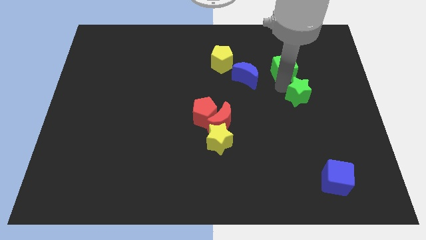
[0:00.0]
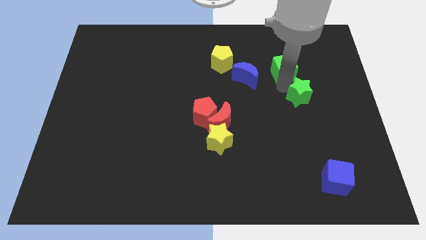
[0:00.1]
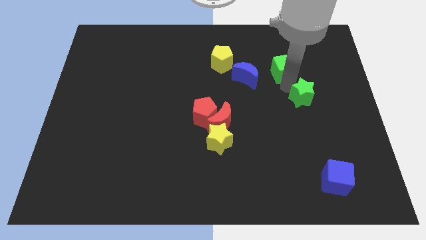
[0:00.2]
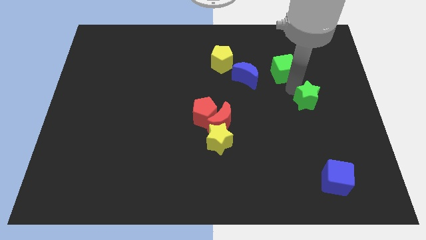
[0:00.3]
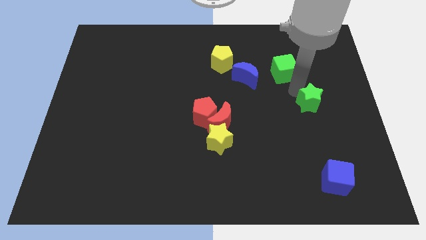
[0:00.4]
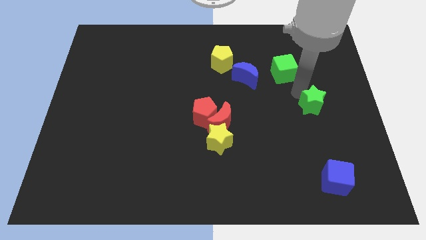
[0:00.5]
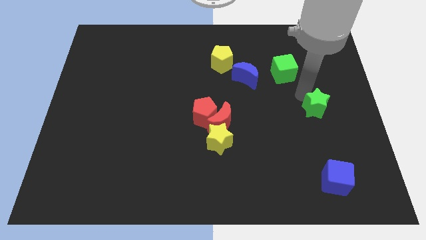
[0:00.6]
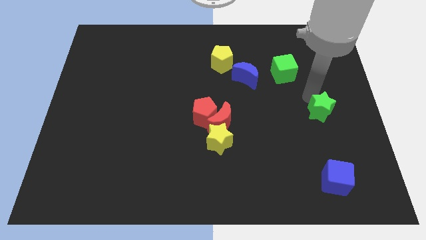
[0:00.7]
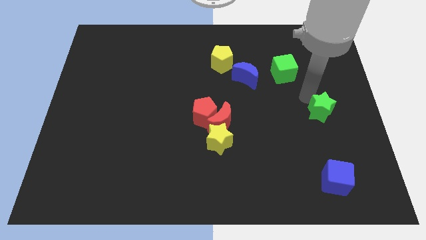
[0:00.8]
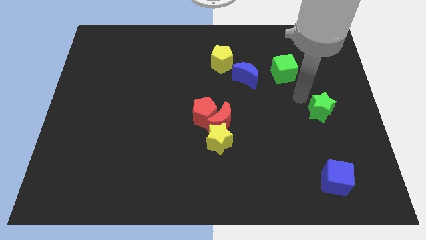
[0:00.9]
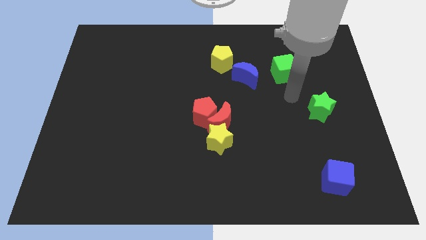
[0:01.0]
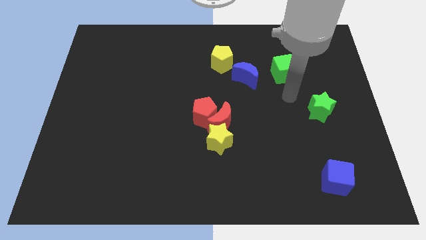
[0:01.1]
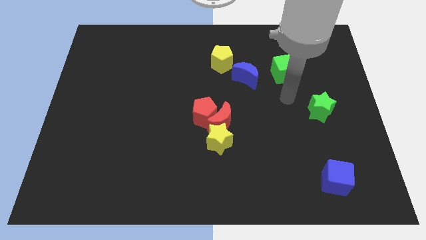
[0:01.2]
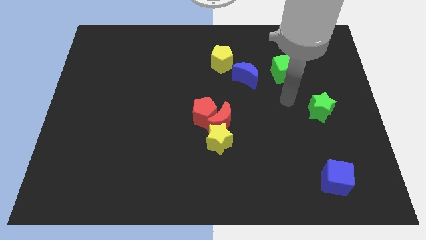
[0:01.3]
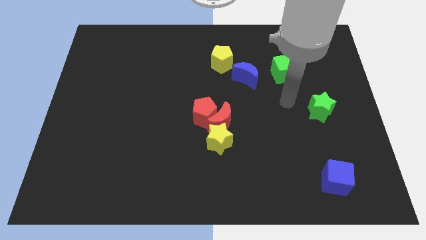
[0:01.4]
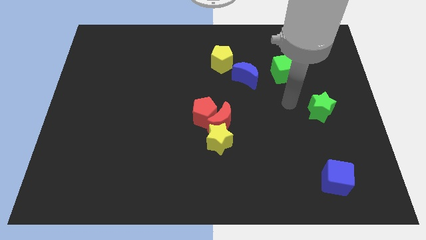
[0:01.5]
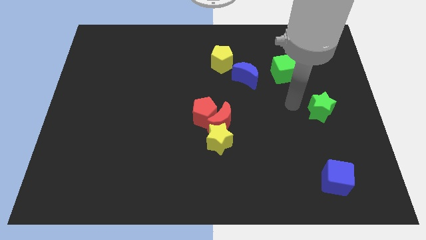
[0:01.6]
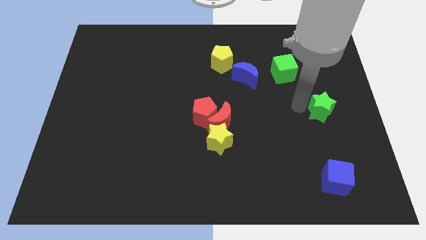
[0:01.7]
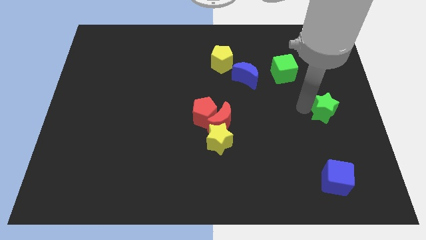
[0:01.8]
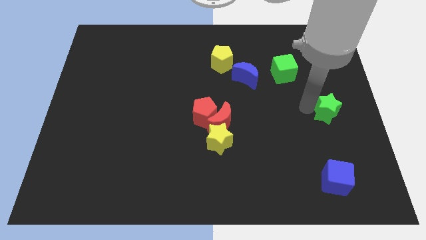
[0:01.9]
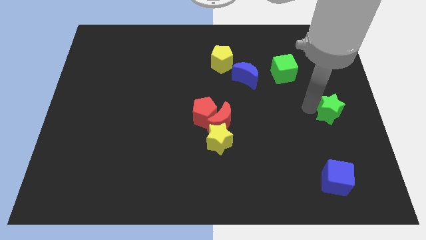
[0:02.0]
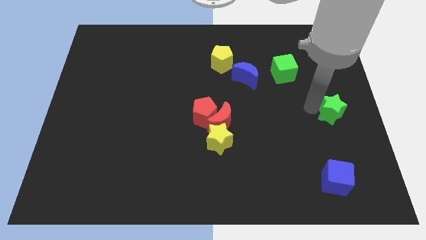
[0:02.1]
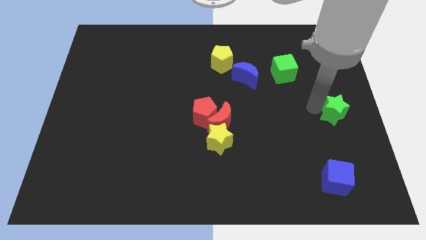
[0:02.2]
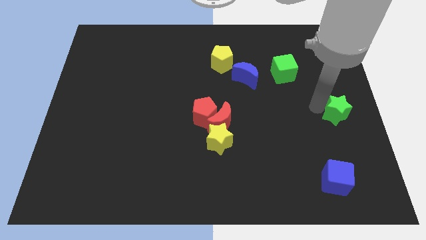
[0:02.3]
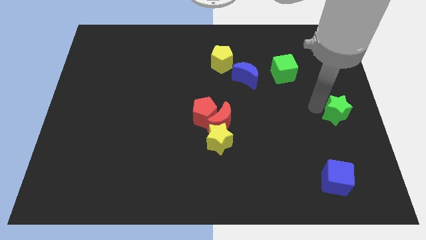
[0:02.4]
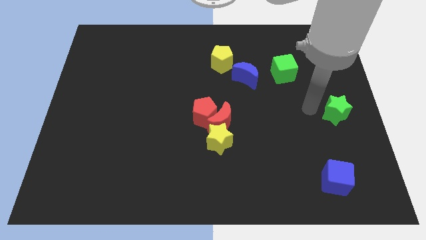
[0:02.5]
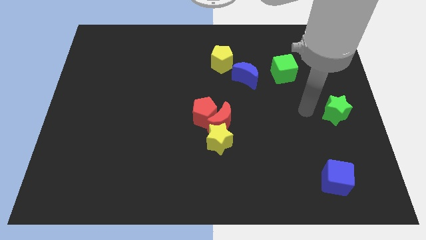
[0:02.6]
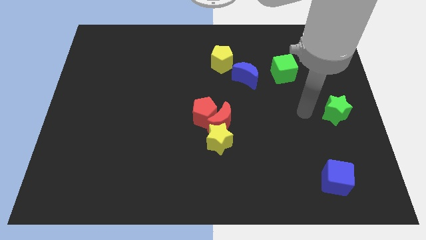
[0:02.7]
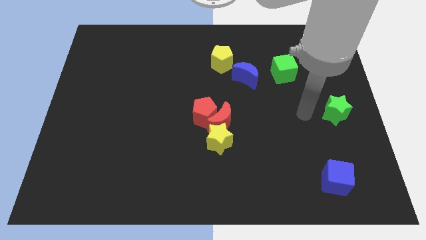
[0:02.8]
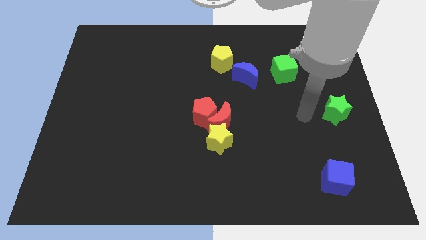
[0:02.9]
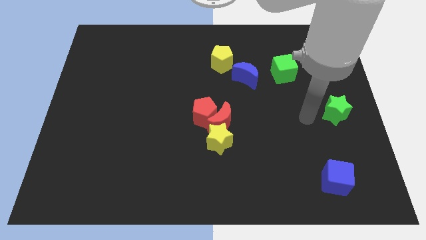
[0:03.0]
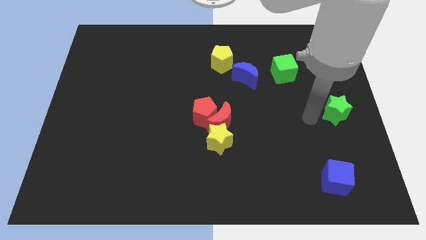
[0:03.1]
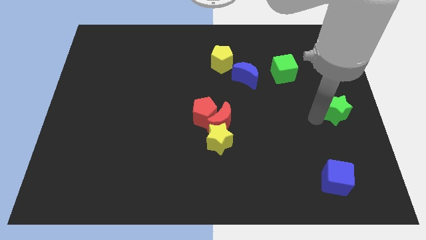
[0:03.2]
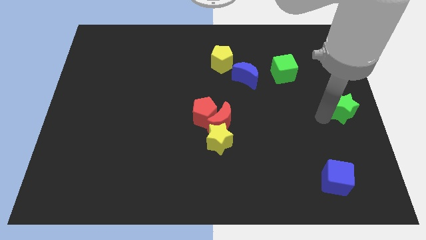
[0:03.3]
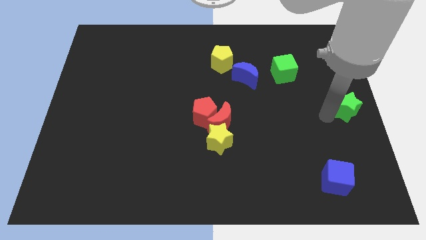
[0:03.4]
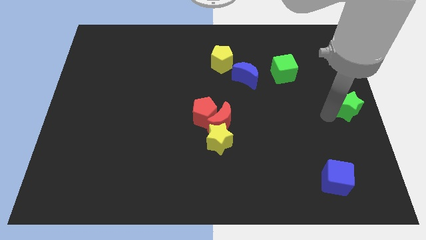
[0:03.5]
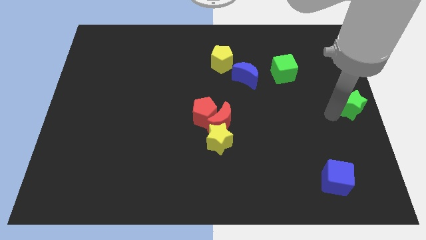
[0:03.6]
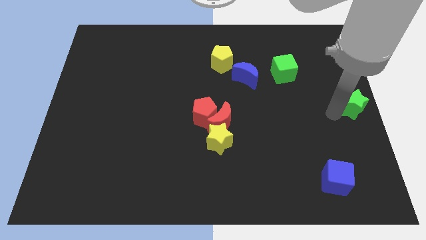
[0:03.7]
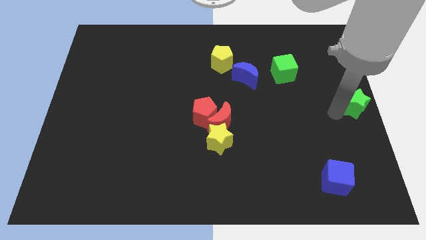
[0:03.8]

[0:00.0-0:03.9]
move the green star to the right center of the board

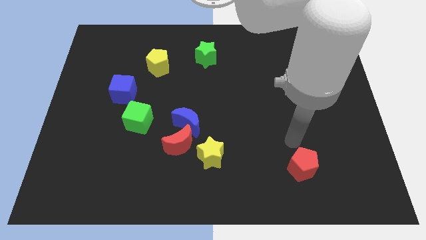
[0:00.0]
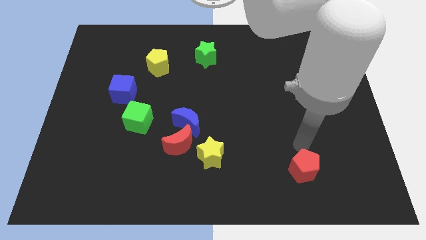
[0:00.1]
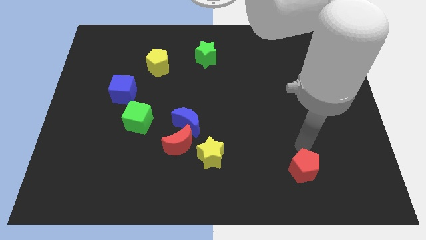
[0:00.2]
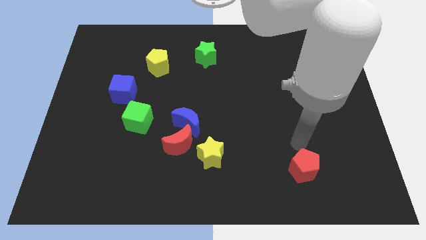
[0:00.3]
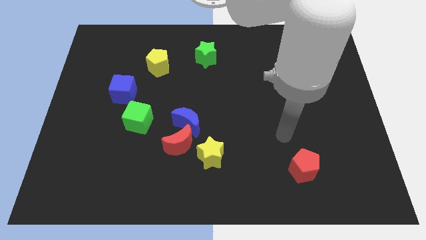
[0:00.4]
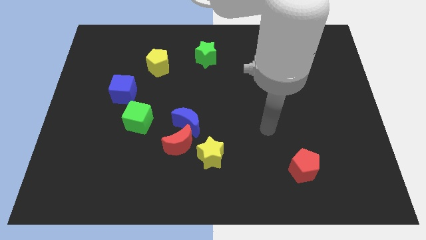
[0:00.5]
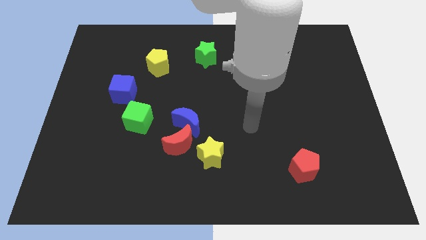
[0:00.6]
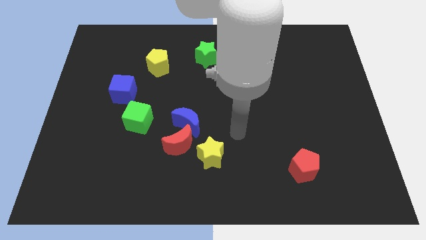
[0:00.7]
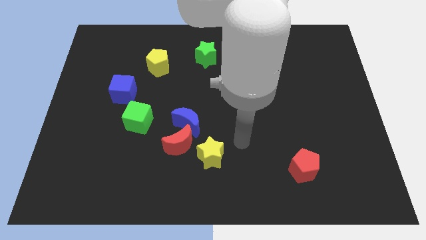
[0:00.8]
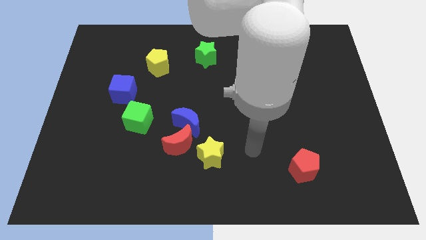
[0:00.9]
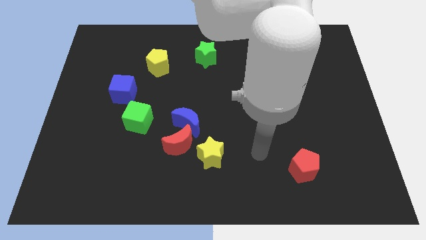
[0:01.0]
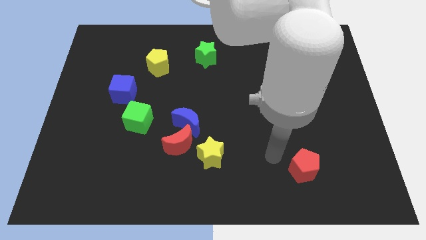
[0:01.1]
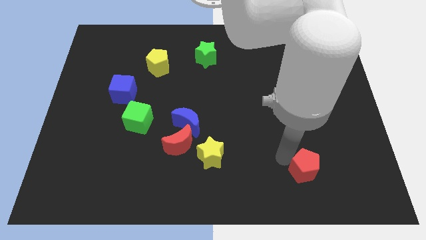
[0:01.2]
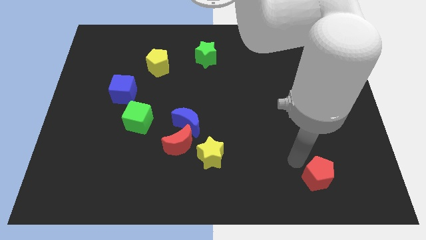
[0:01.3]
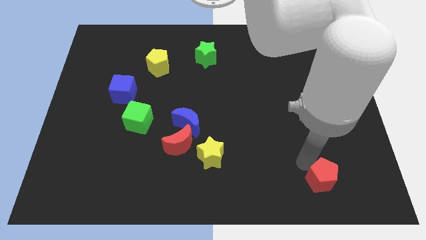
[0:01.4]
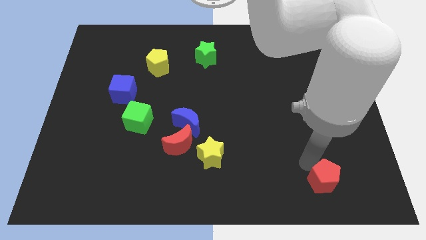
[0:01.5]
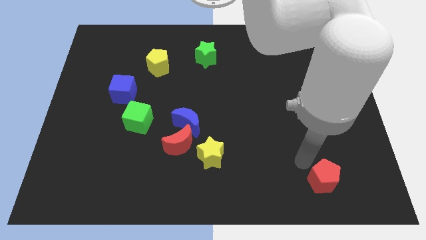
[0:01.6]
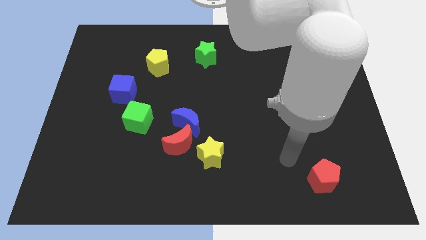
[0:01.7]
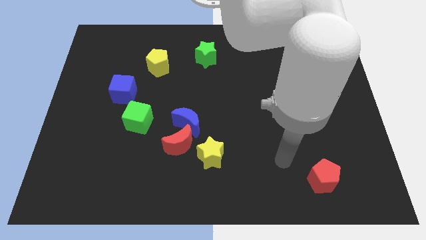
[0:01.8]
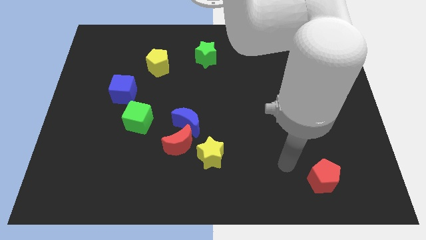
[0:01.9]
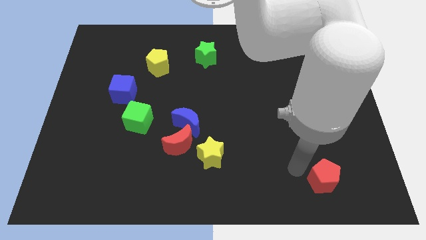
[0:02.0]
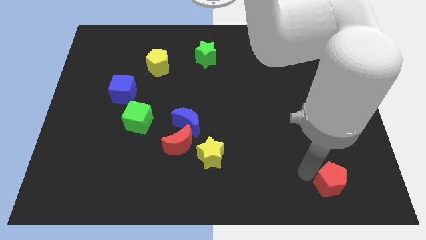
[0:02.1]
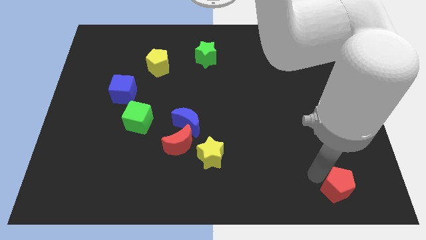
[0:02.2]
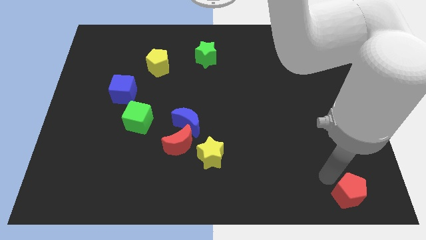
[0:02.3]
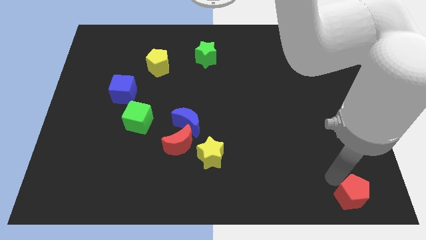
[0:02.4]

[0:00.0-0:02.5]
push the red pentagon to the bottom right

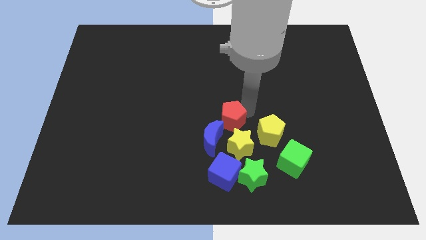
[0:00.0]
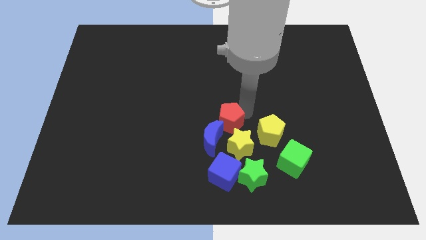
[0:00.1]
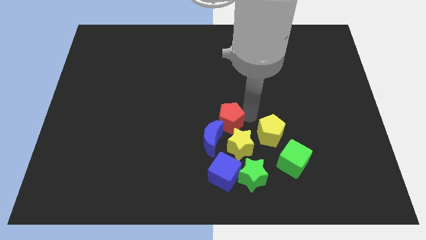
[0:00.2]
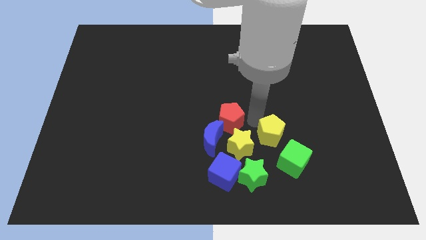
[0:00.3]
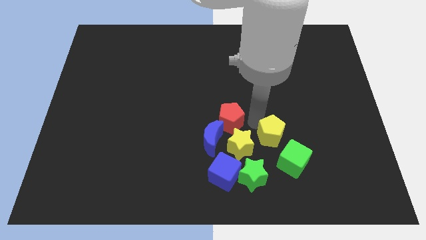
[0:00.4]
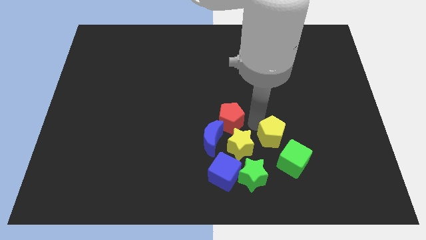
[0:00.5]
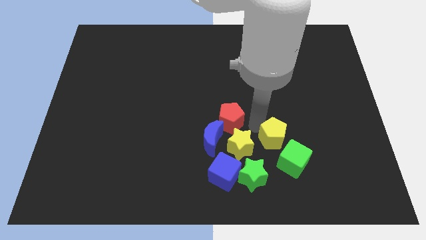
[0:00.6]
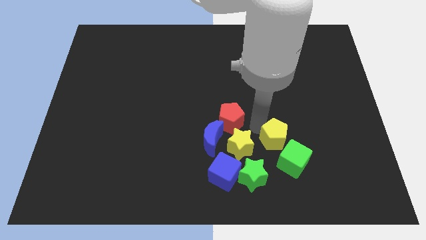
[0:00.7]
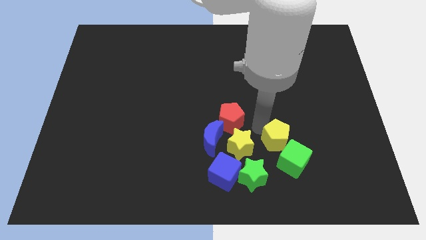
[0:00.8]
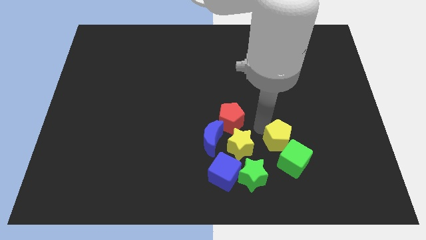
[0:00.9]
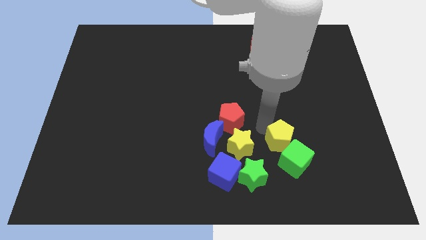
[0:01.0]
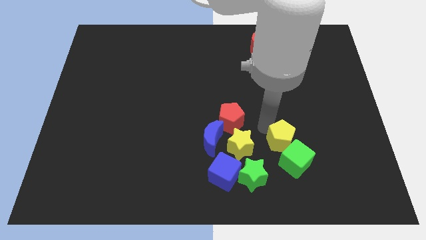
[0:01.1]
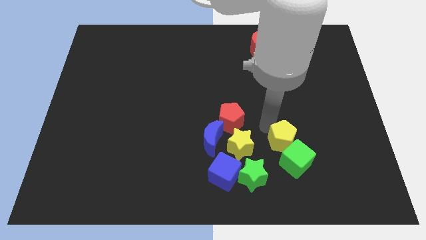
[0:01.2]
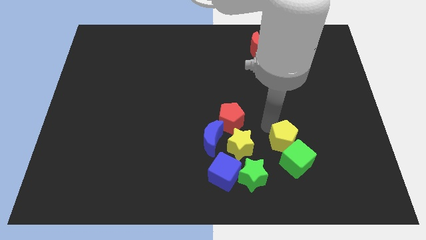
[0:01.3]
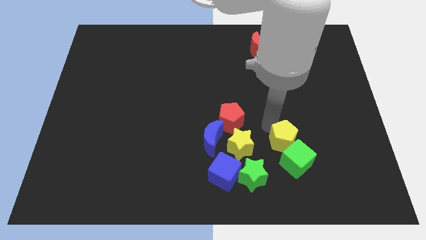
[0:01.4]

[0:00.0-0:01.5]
move the yellow pentagon into the green cube

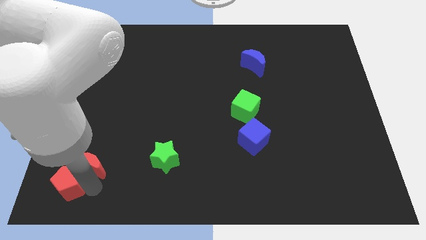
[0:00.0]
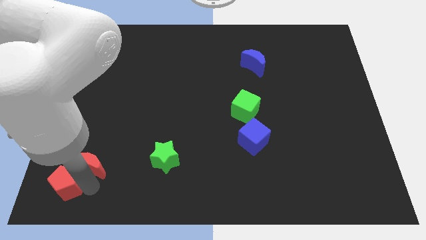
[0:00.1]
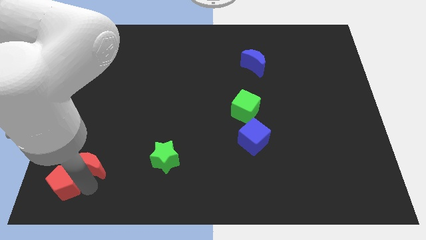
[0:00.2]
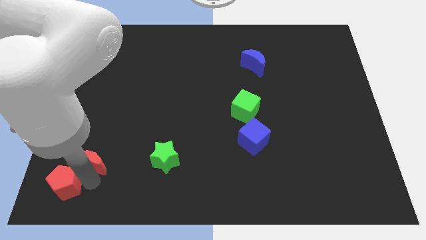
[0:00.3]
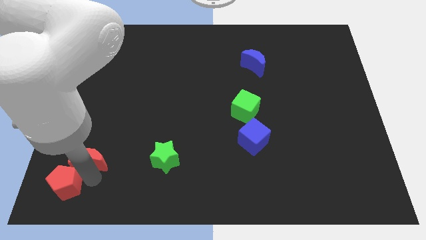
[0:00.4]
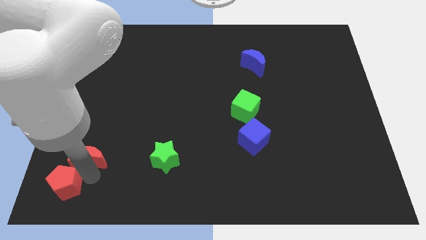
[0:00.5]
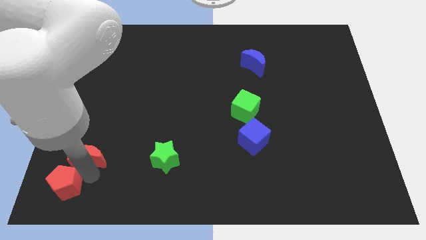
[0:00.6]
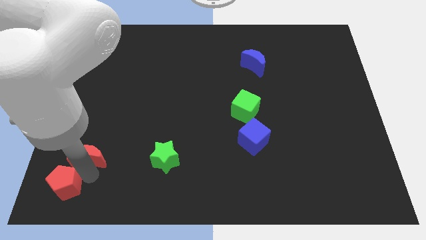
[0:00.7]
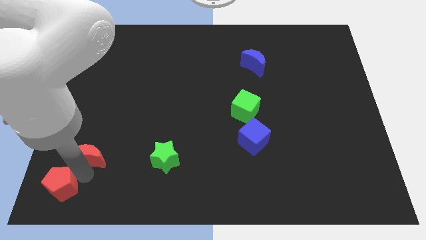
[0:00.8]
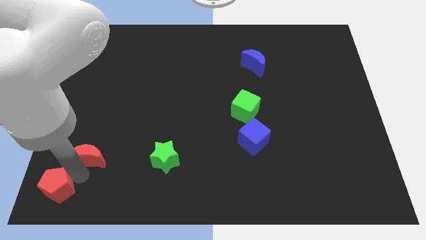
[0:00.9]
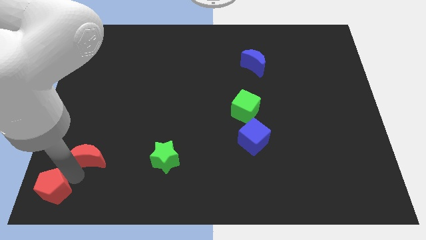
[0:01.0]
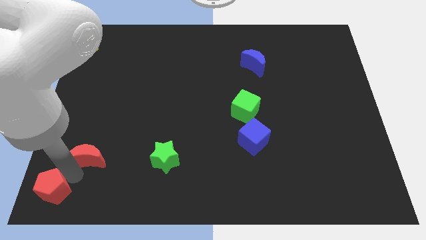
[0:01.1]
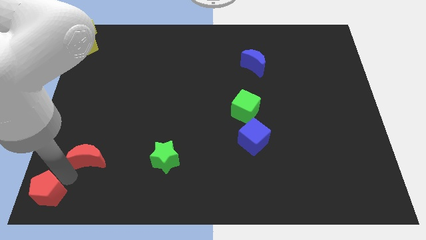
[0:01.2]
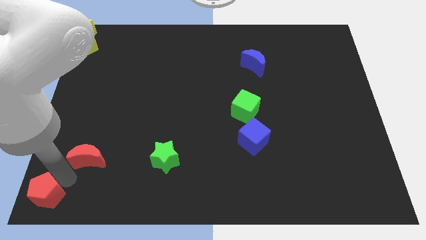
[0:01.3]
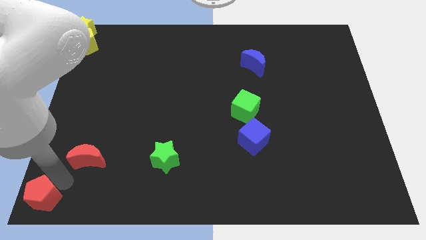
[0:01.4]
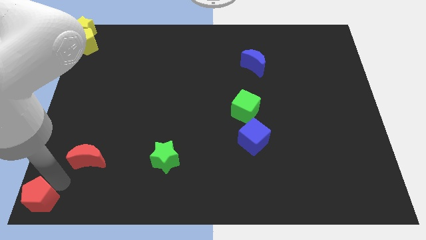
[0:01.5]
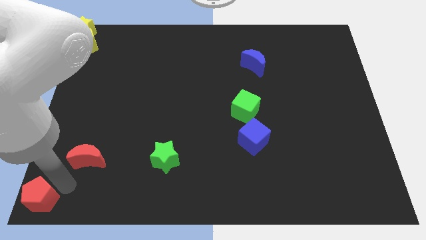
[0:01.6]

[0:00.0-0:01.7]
separate the red pentagon from the red crescent
